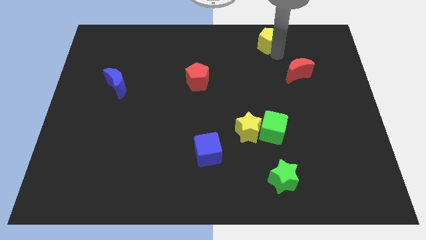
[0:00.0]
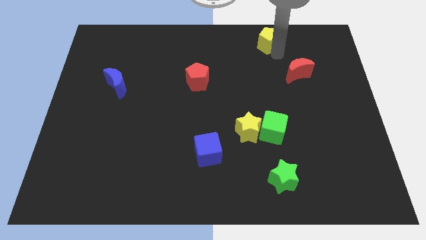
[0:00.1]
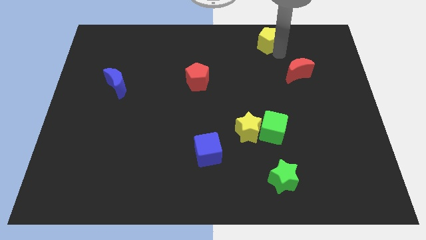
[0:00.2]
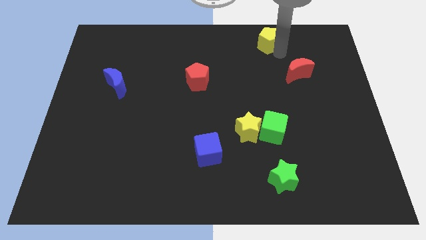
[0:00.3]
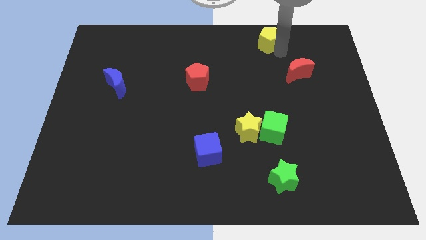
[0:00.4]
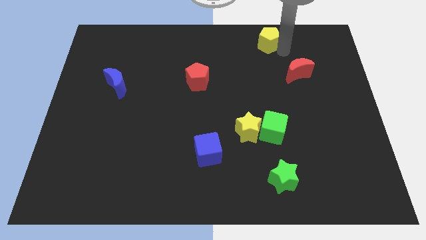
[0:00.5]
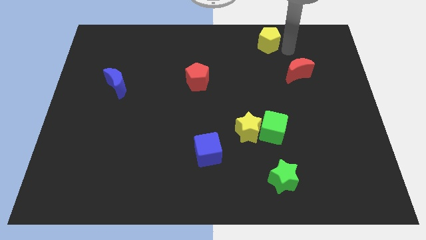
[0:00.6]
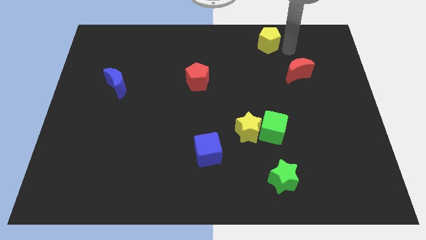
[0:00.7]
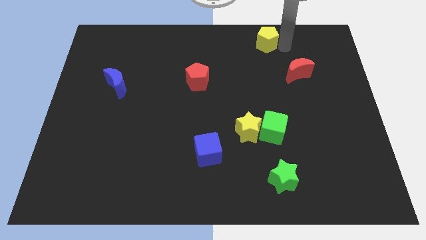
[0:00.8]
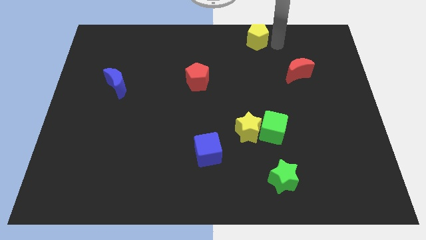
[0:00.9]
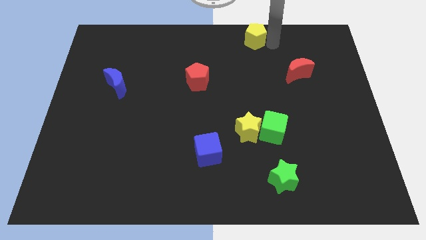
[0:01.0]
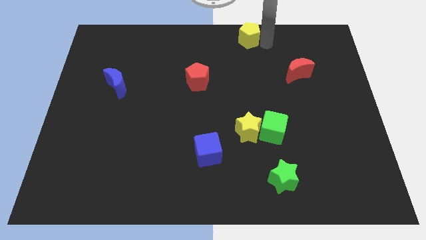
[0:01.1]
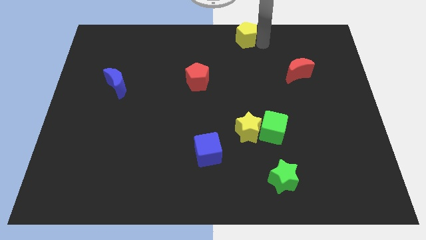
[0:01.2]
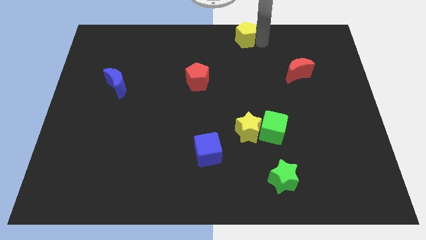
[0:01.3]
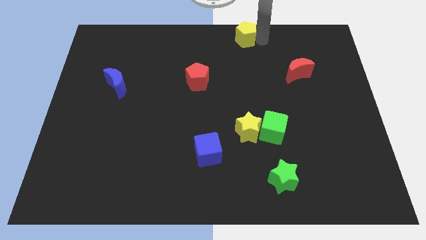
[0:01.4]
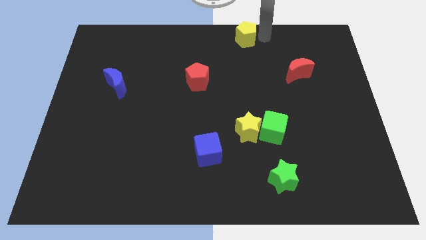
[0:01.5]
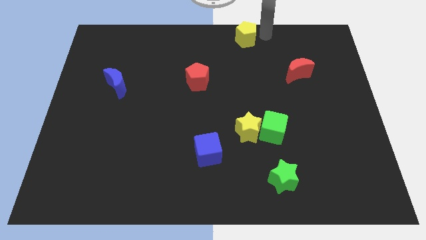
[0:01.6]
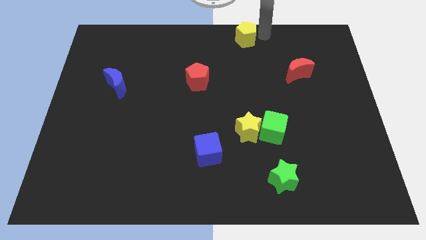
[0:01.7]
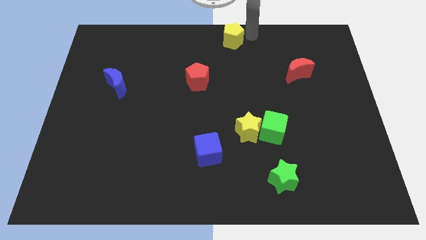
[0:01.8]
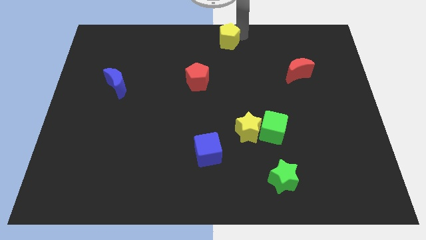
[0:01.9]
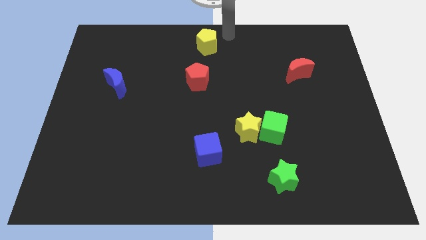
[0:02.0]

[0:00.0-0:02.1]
move the yellow pentagon above the red pentagon

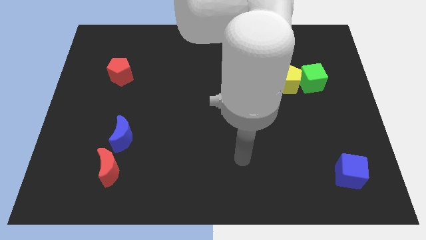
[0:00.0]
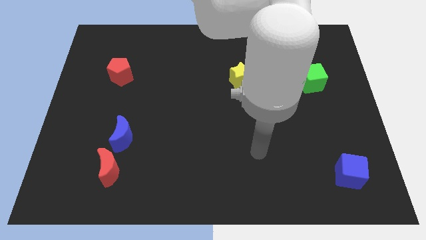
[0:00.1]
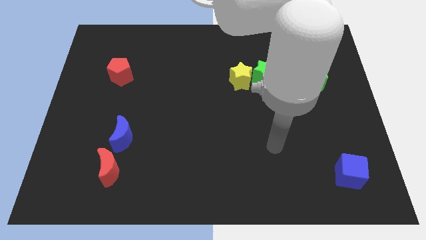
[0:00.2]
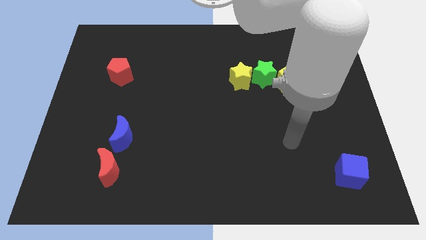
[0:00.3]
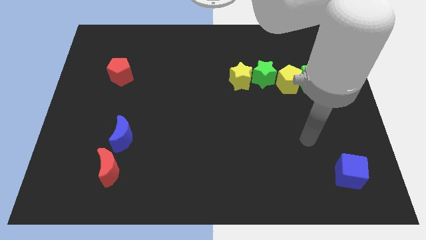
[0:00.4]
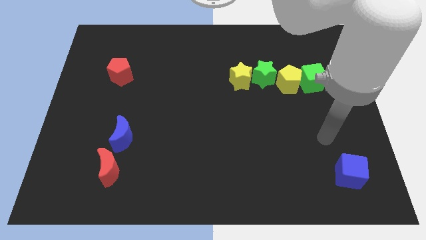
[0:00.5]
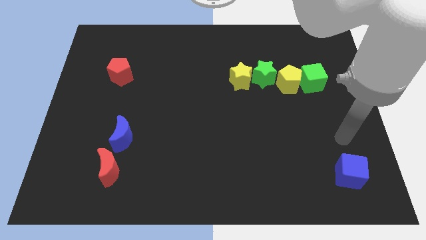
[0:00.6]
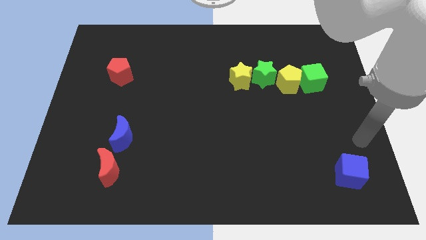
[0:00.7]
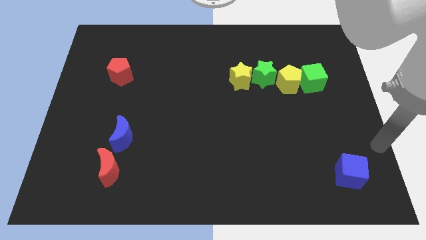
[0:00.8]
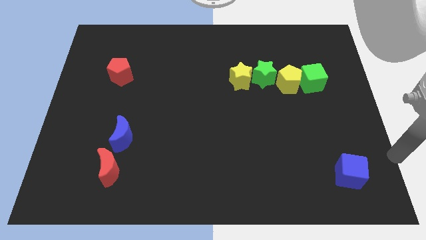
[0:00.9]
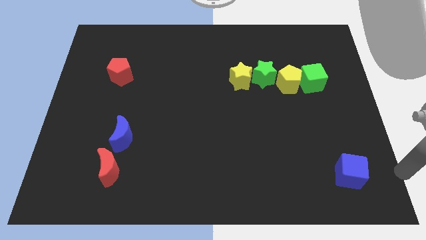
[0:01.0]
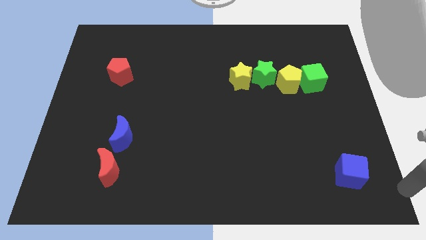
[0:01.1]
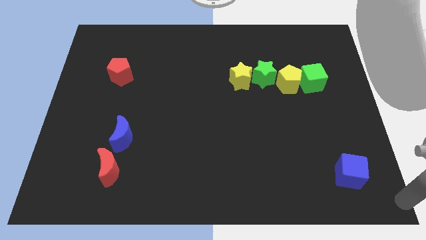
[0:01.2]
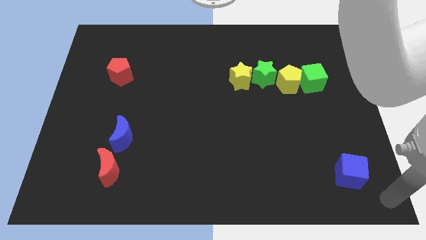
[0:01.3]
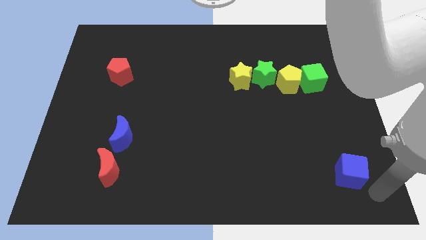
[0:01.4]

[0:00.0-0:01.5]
slide your hand to the bottom right

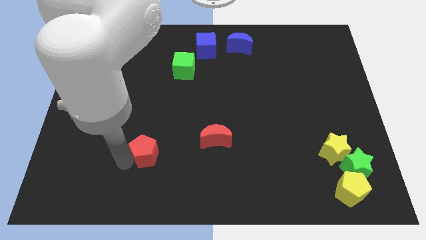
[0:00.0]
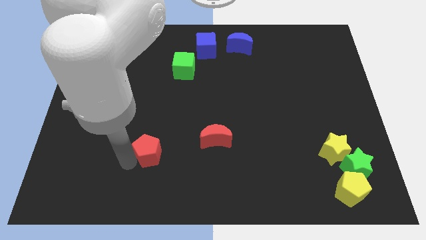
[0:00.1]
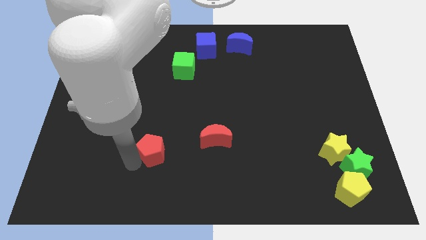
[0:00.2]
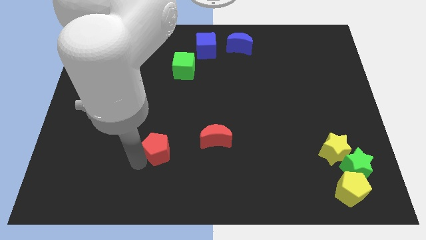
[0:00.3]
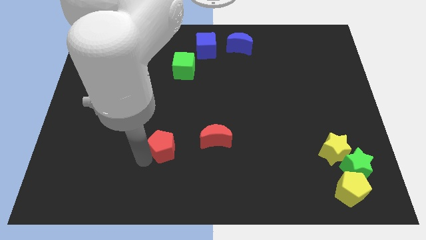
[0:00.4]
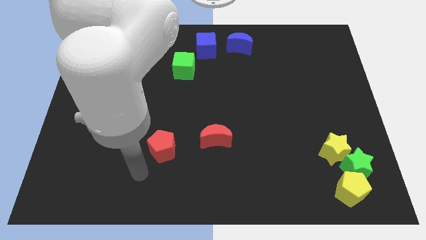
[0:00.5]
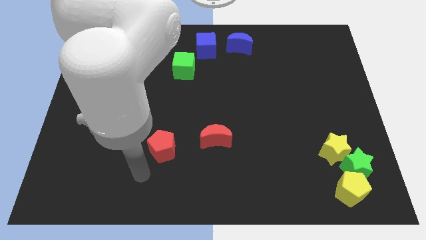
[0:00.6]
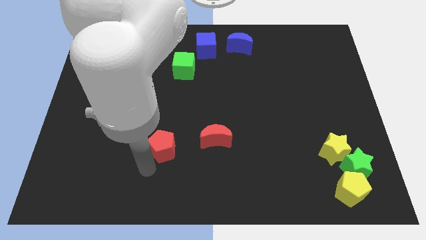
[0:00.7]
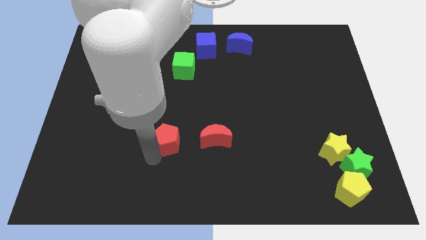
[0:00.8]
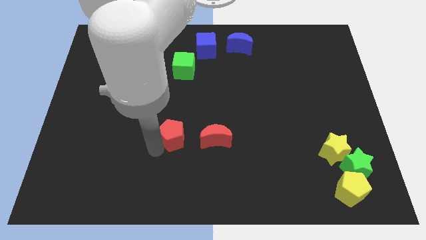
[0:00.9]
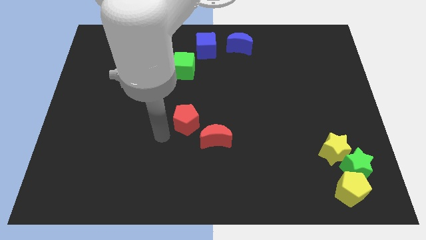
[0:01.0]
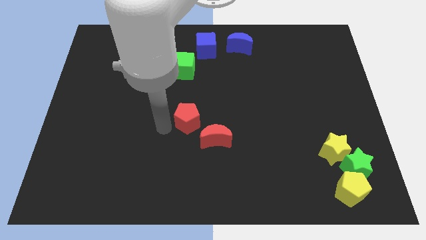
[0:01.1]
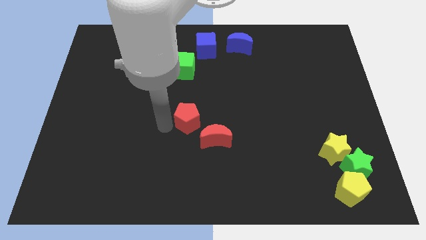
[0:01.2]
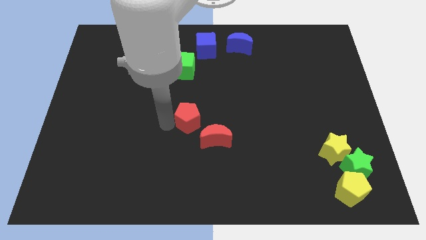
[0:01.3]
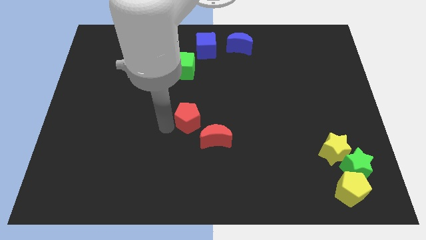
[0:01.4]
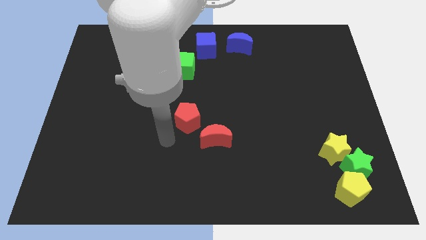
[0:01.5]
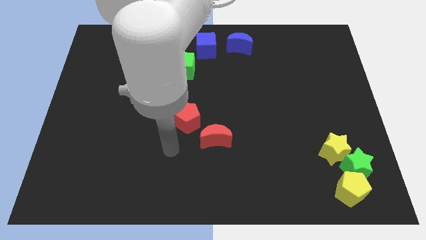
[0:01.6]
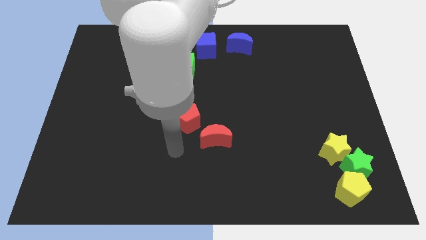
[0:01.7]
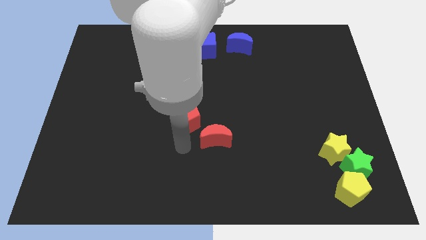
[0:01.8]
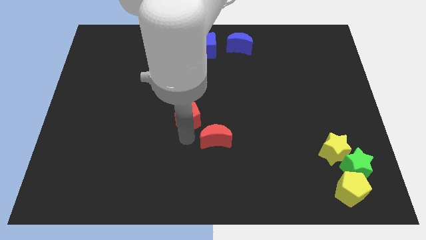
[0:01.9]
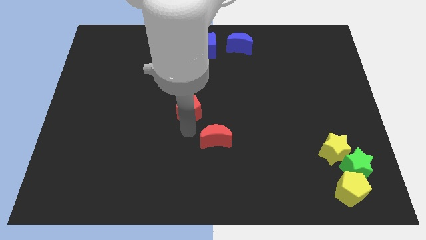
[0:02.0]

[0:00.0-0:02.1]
slide the red pentagon diagonally top left to the red moon

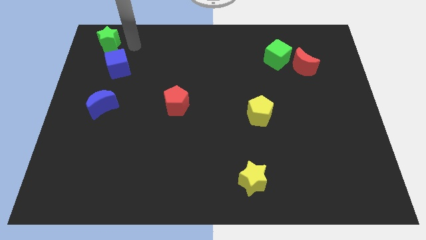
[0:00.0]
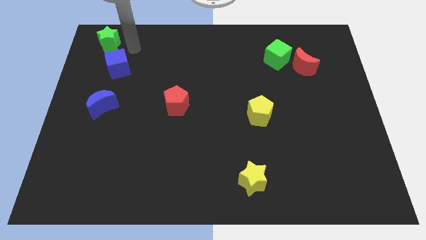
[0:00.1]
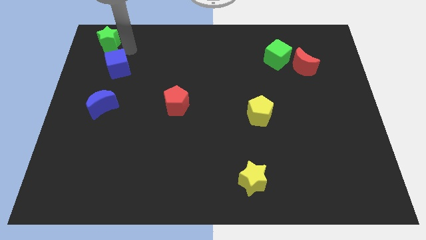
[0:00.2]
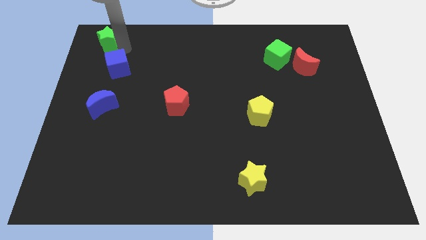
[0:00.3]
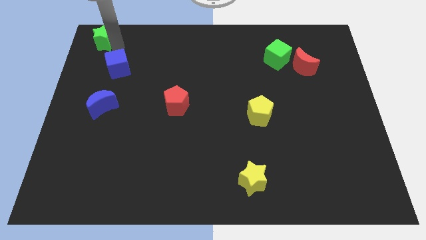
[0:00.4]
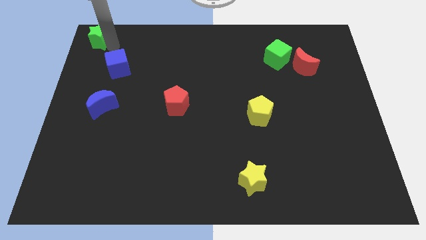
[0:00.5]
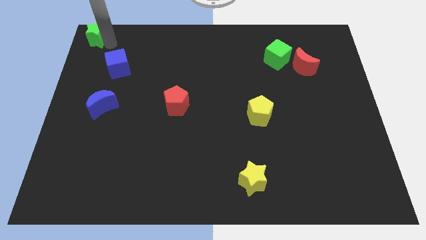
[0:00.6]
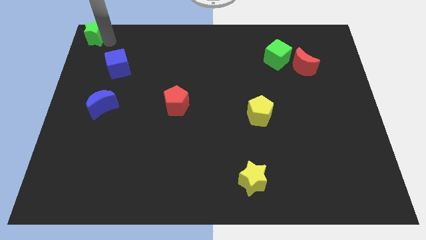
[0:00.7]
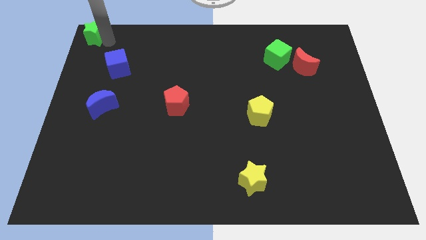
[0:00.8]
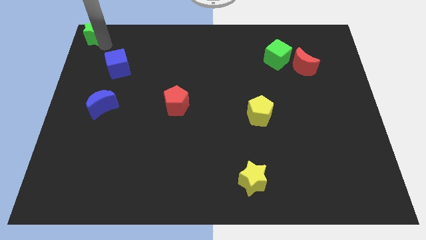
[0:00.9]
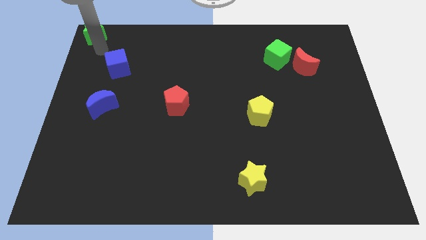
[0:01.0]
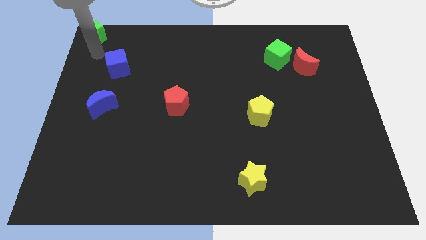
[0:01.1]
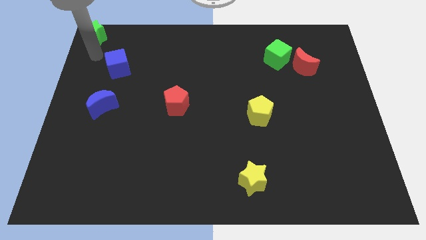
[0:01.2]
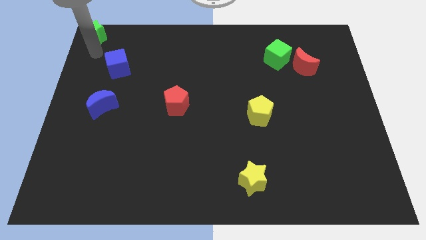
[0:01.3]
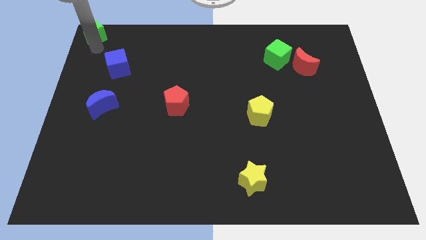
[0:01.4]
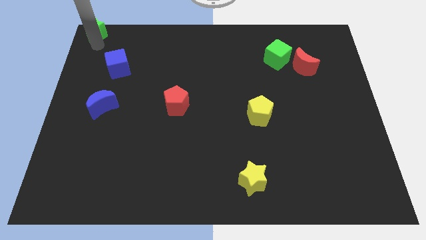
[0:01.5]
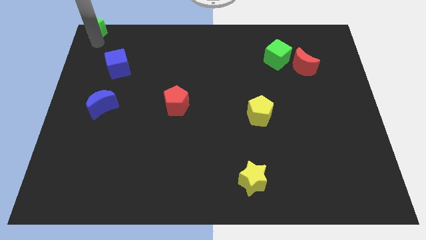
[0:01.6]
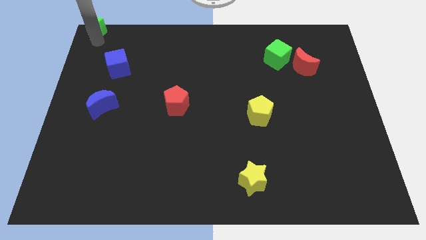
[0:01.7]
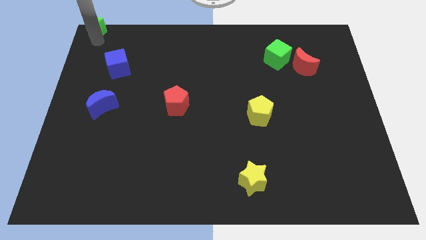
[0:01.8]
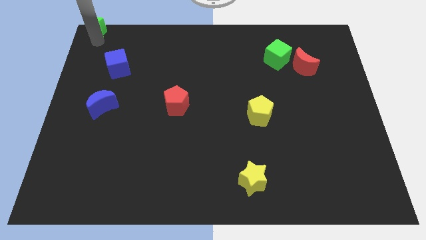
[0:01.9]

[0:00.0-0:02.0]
move the green star to the top left corner of the board

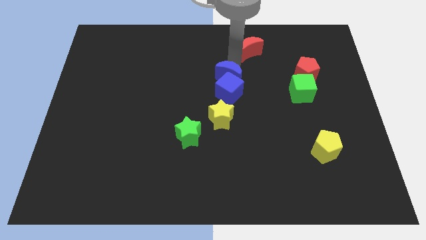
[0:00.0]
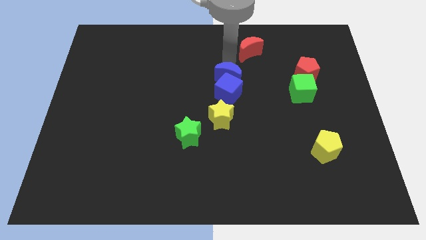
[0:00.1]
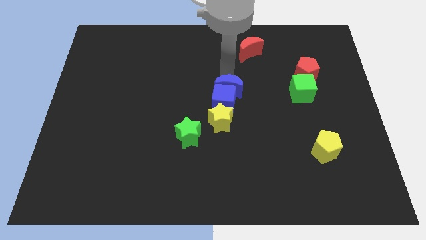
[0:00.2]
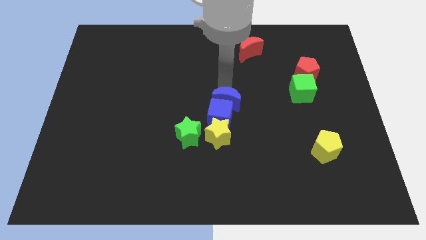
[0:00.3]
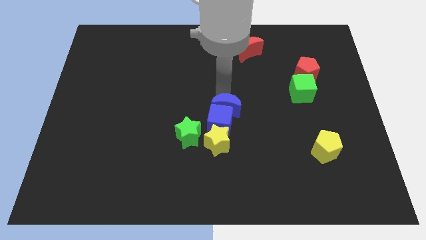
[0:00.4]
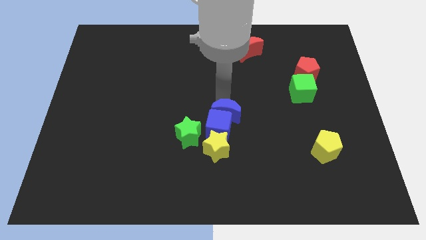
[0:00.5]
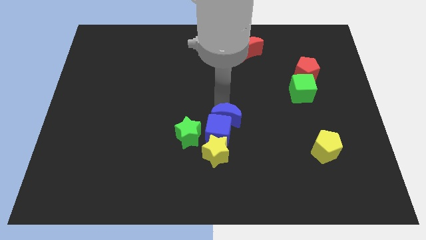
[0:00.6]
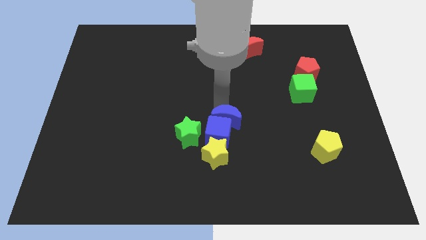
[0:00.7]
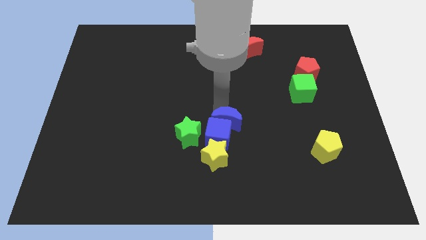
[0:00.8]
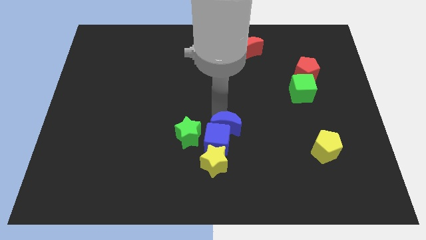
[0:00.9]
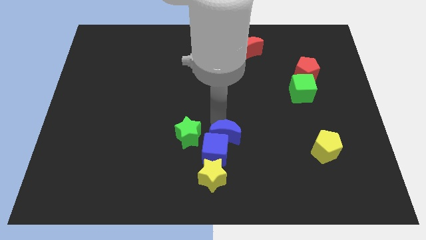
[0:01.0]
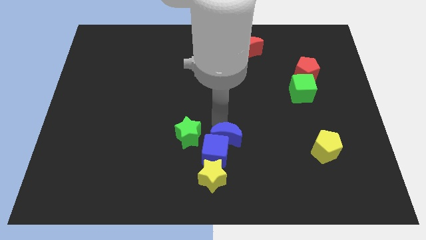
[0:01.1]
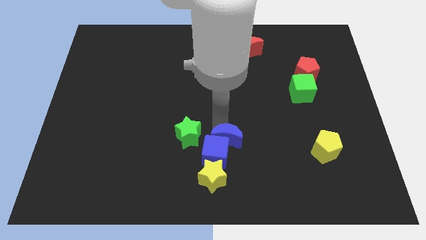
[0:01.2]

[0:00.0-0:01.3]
push the blue crescent towards the bottom center of the board
